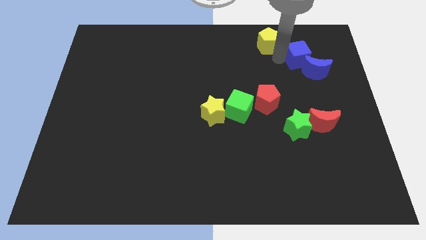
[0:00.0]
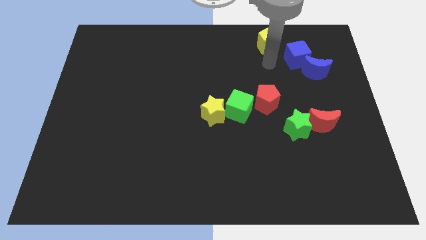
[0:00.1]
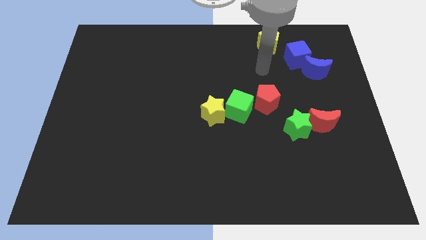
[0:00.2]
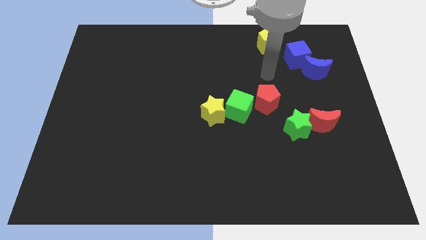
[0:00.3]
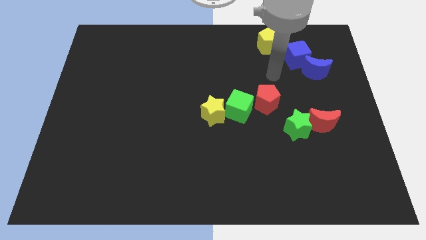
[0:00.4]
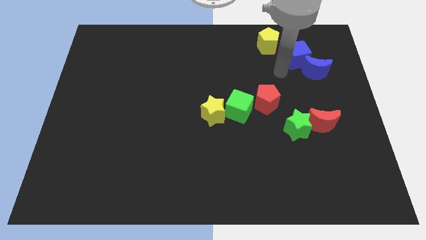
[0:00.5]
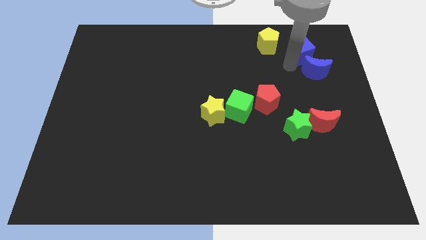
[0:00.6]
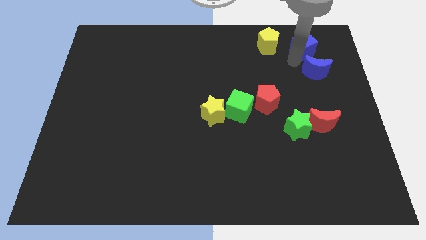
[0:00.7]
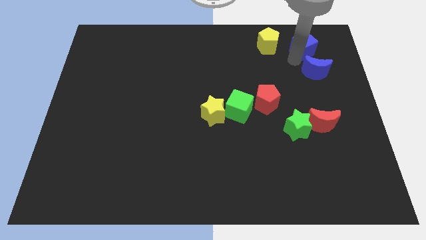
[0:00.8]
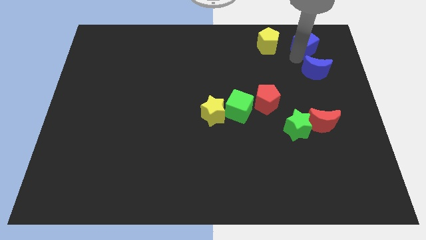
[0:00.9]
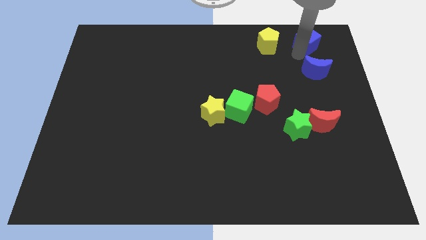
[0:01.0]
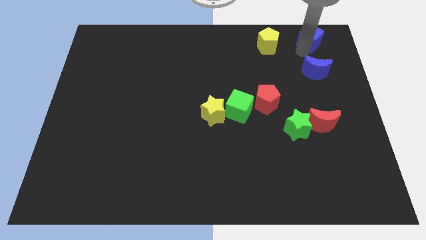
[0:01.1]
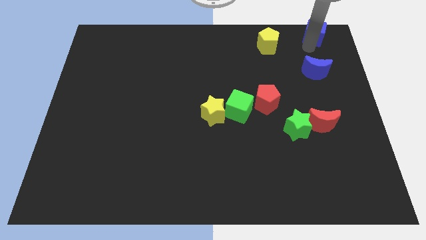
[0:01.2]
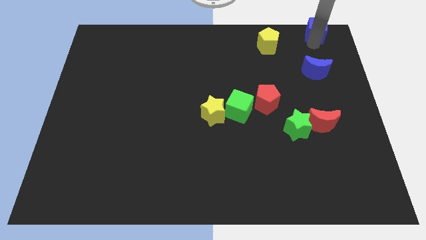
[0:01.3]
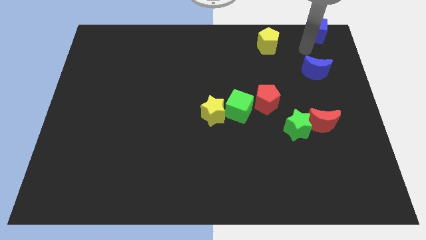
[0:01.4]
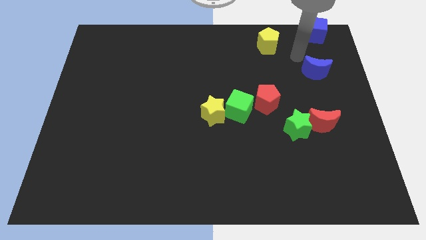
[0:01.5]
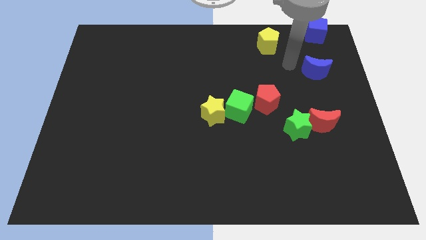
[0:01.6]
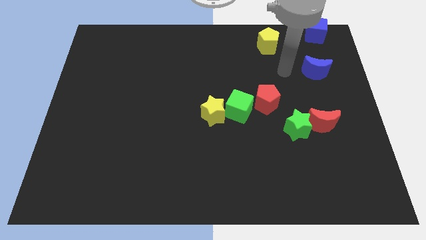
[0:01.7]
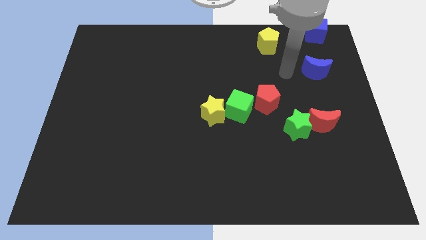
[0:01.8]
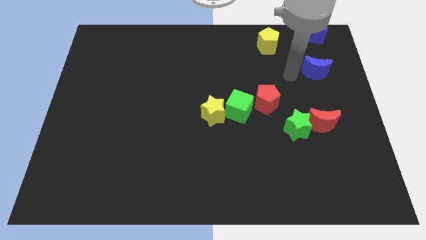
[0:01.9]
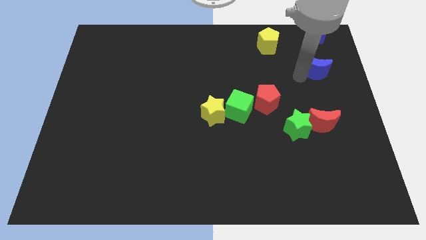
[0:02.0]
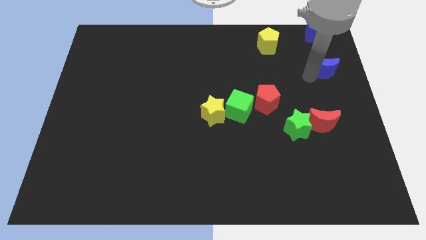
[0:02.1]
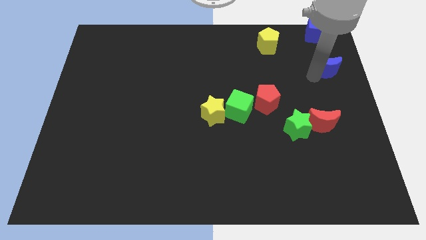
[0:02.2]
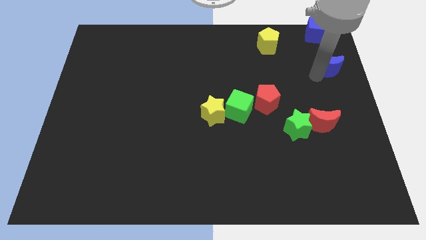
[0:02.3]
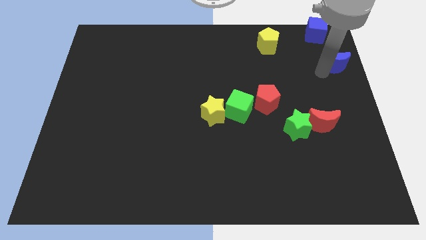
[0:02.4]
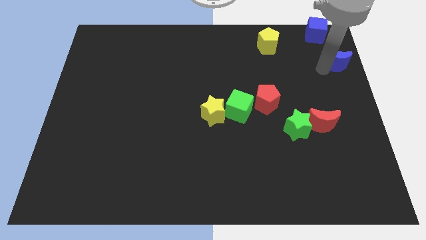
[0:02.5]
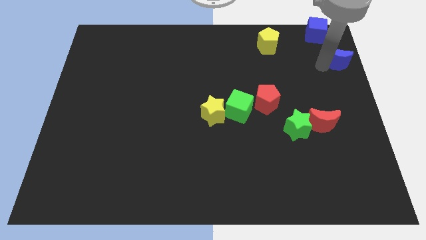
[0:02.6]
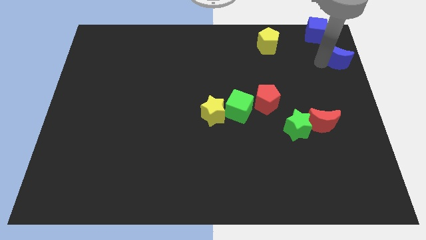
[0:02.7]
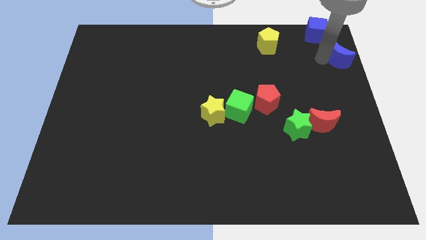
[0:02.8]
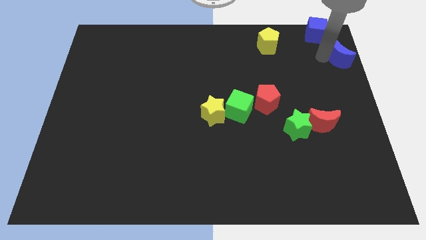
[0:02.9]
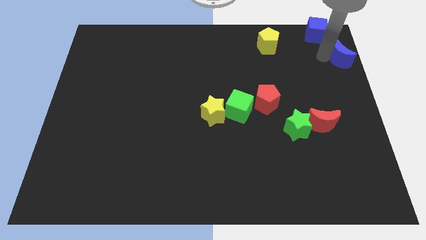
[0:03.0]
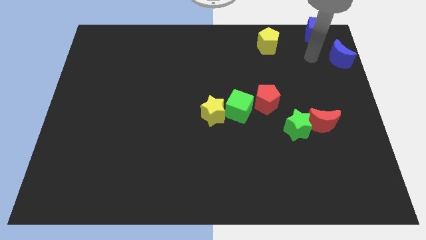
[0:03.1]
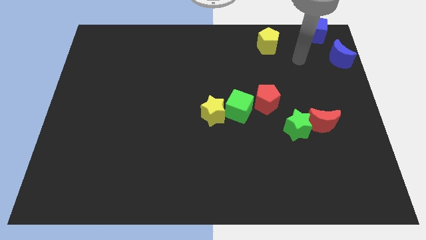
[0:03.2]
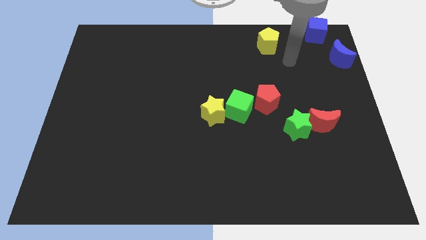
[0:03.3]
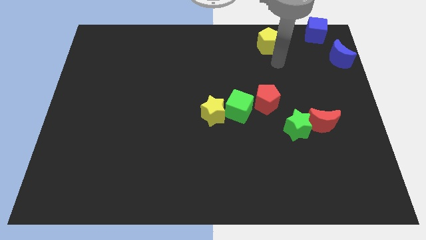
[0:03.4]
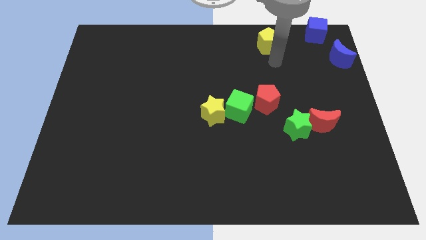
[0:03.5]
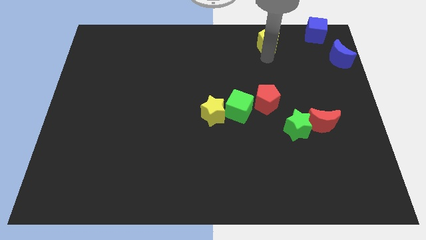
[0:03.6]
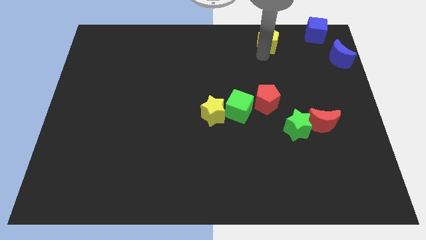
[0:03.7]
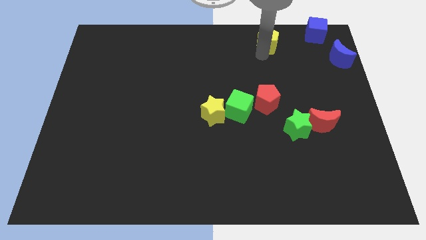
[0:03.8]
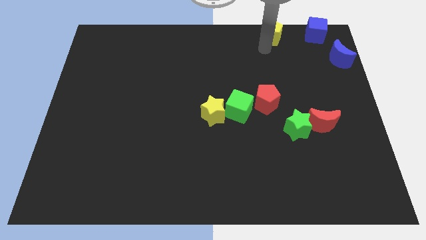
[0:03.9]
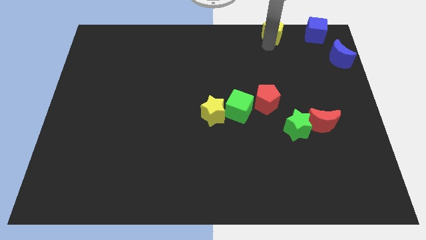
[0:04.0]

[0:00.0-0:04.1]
drag blue blocks to the top right corner of the board diagonal to each other

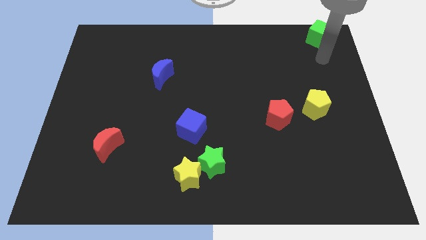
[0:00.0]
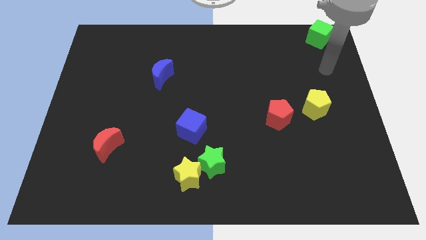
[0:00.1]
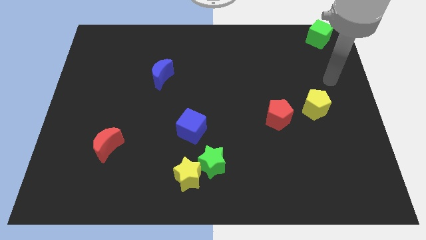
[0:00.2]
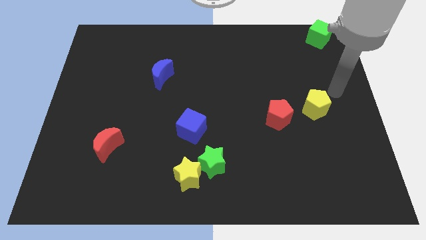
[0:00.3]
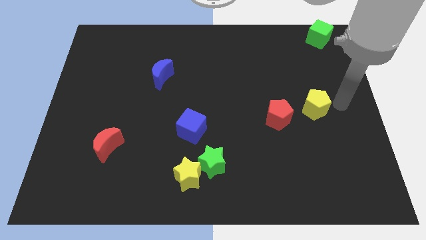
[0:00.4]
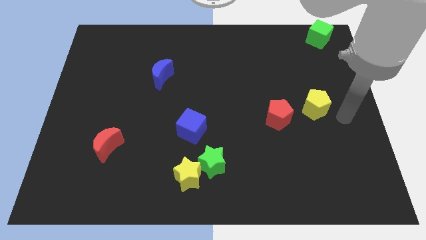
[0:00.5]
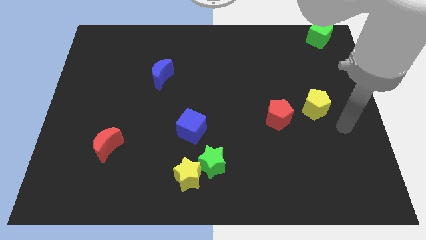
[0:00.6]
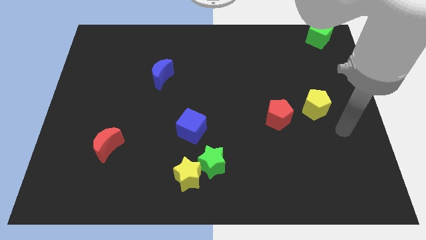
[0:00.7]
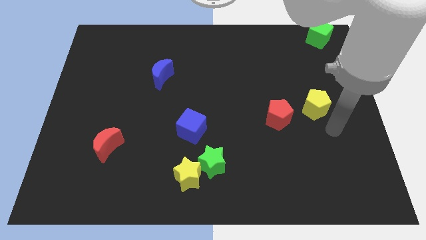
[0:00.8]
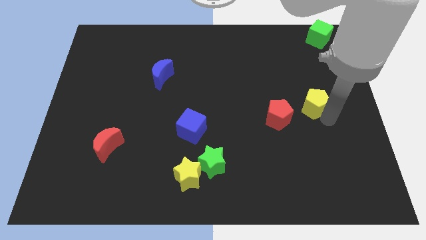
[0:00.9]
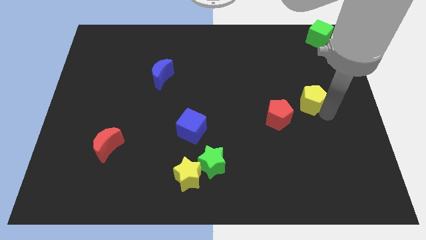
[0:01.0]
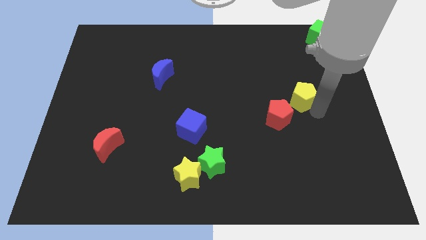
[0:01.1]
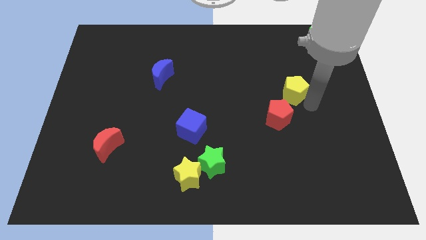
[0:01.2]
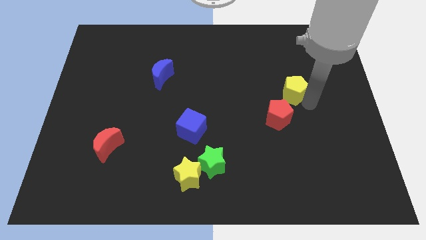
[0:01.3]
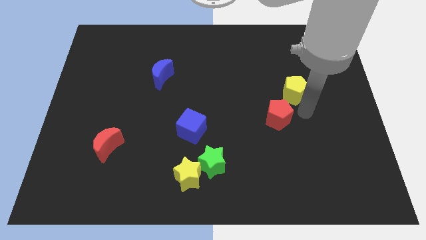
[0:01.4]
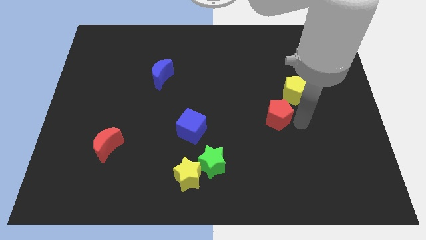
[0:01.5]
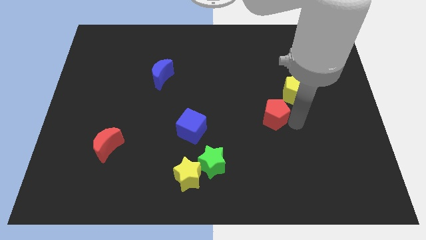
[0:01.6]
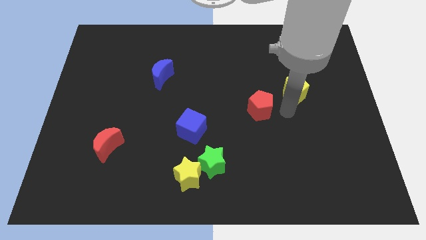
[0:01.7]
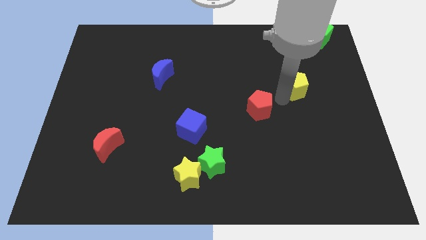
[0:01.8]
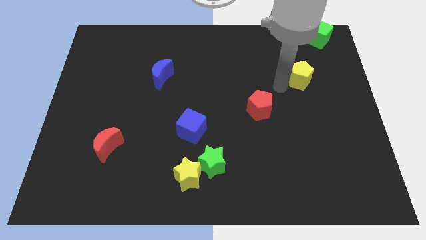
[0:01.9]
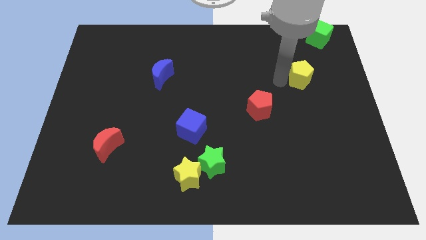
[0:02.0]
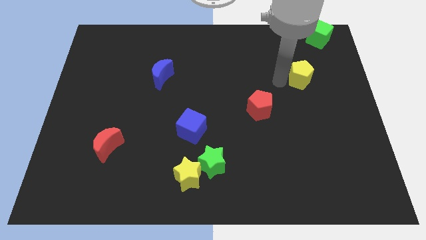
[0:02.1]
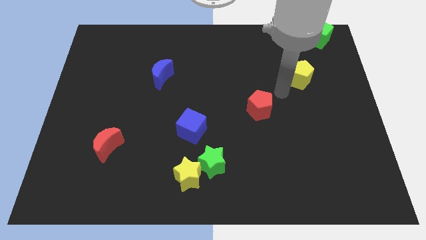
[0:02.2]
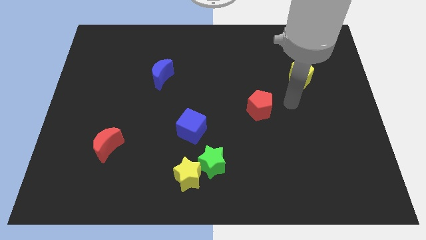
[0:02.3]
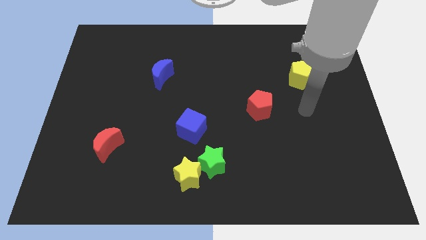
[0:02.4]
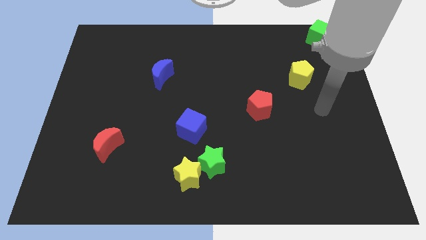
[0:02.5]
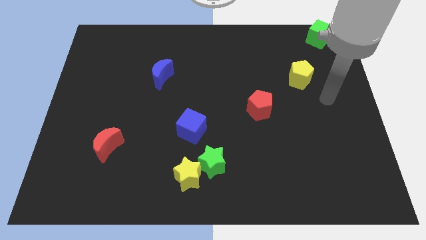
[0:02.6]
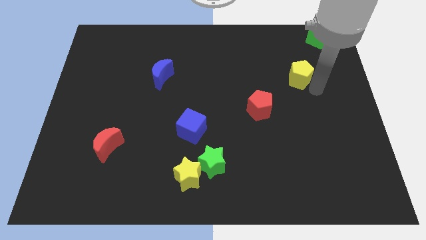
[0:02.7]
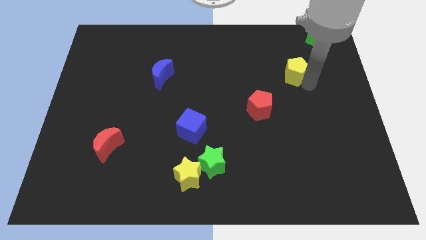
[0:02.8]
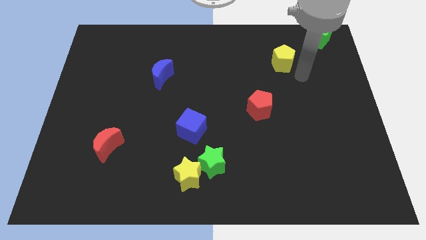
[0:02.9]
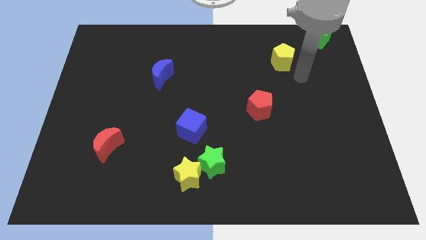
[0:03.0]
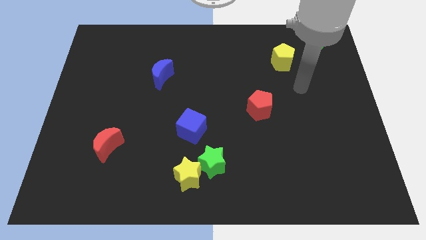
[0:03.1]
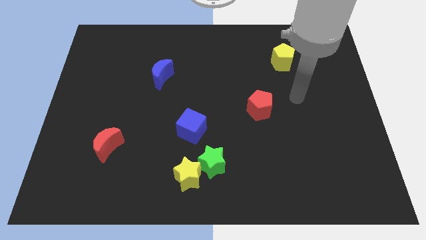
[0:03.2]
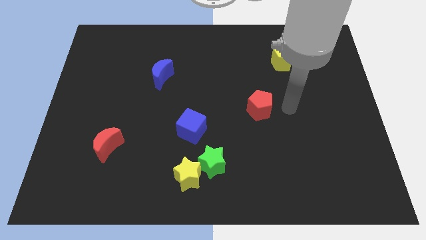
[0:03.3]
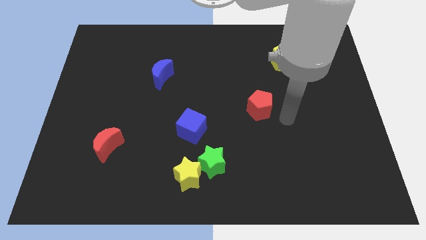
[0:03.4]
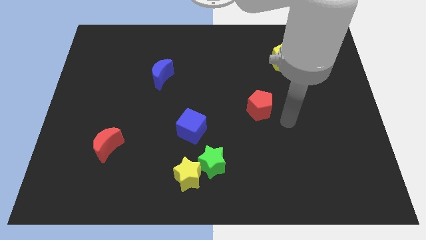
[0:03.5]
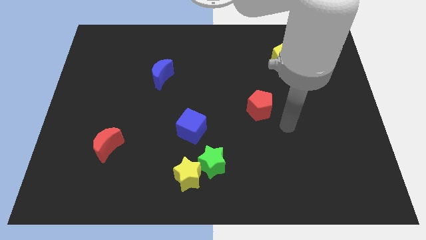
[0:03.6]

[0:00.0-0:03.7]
separate the red pentagon and yellow pentagon

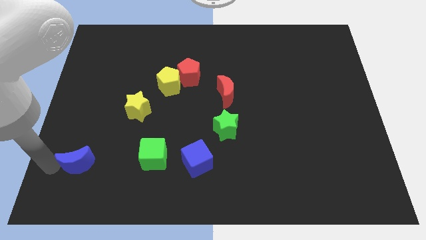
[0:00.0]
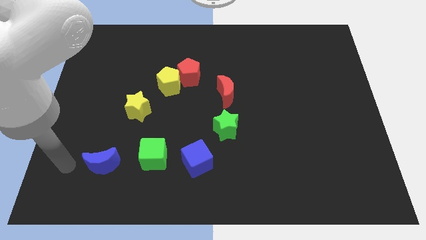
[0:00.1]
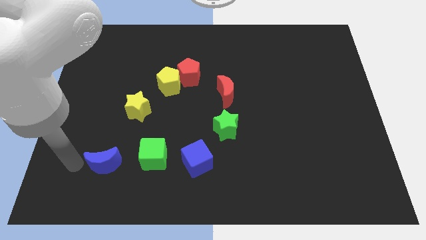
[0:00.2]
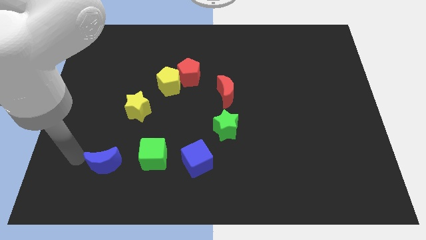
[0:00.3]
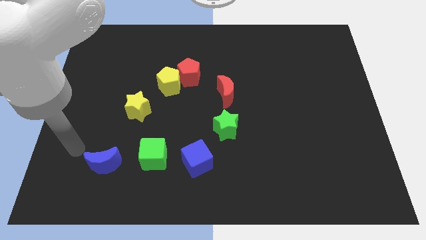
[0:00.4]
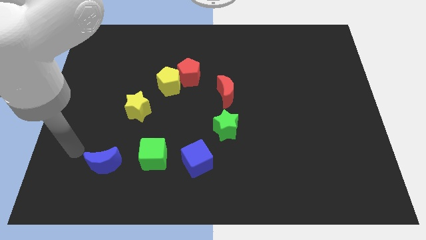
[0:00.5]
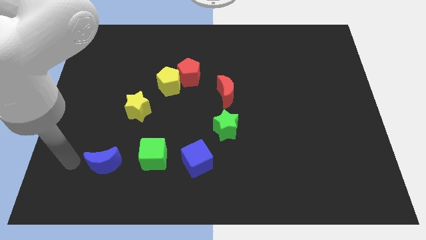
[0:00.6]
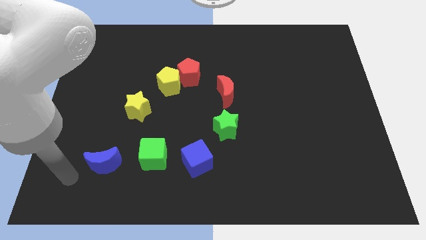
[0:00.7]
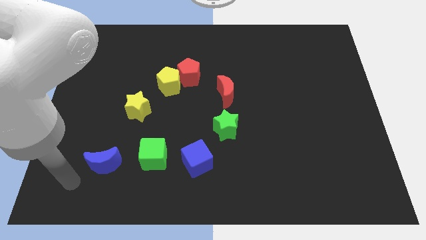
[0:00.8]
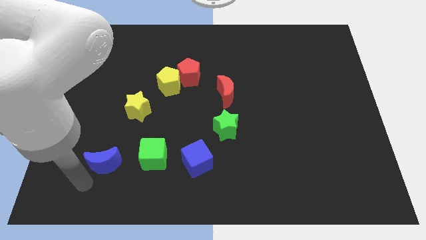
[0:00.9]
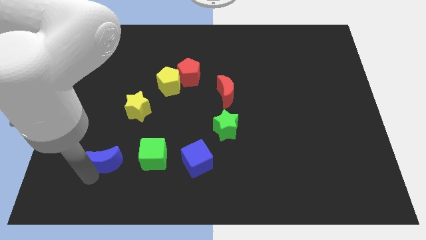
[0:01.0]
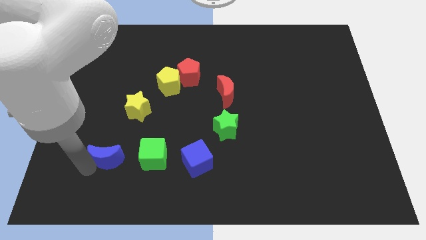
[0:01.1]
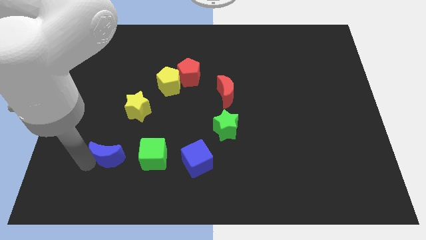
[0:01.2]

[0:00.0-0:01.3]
push the blue crescent parallel to the green cube
